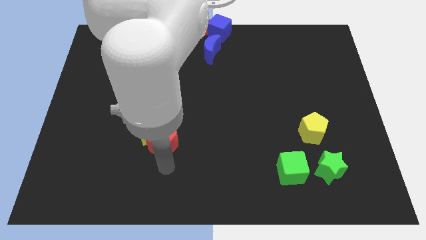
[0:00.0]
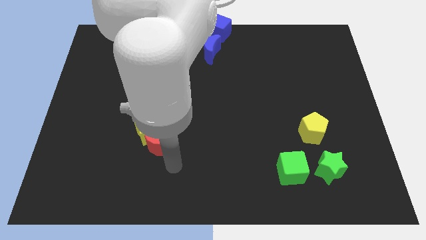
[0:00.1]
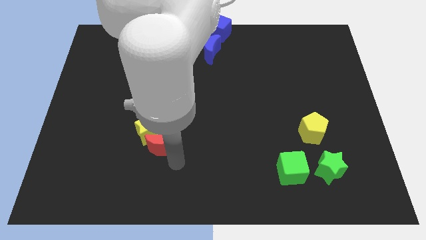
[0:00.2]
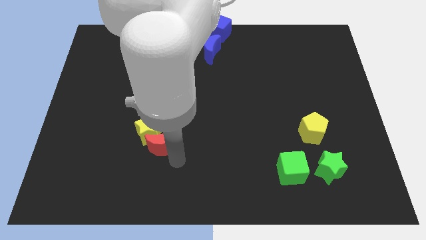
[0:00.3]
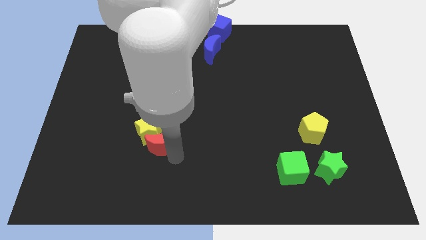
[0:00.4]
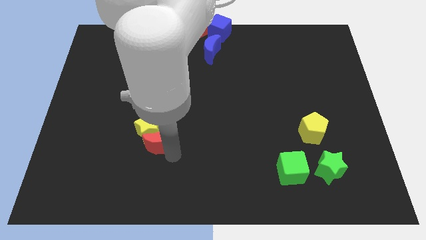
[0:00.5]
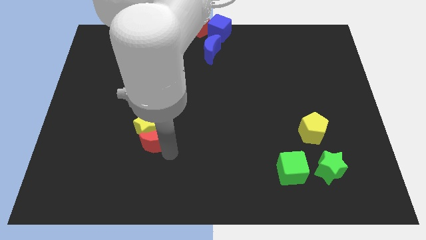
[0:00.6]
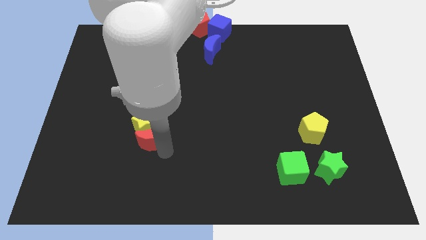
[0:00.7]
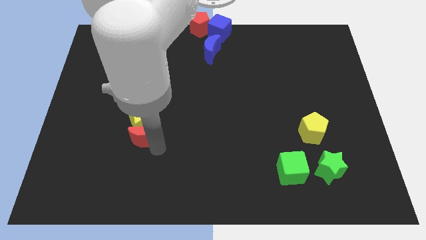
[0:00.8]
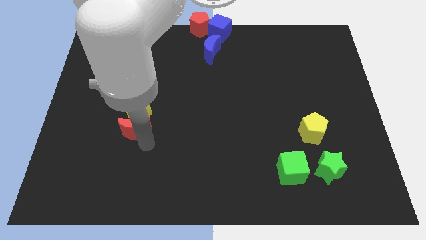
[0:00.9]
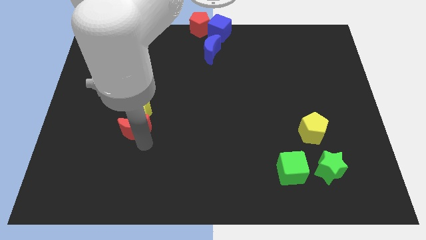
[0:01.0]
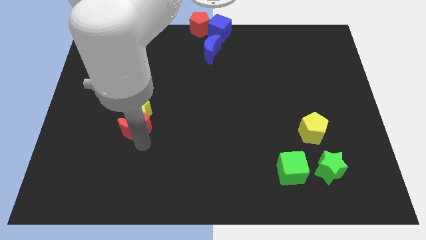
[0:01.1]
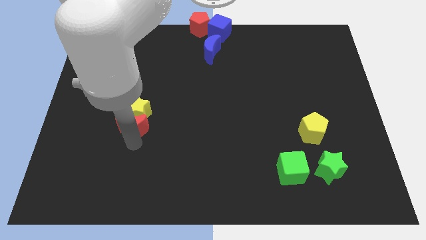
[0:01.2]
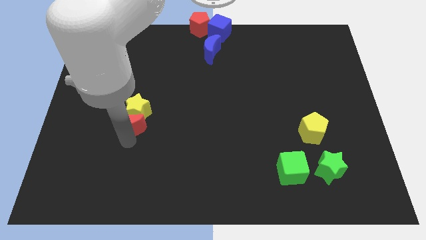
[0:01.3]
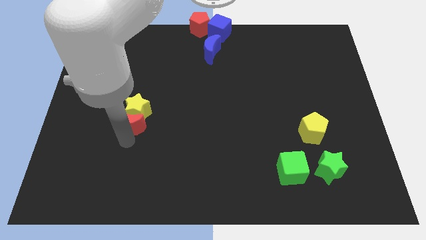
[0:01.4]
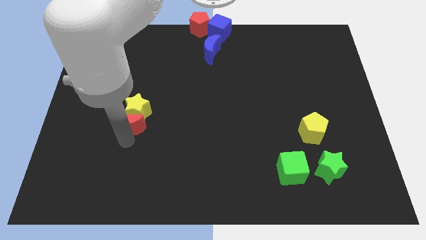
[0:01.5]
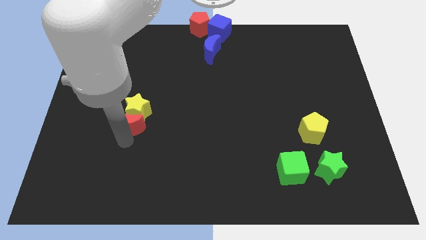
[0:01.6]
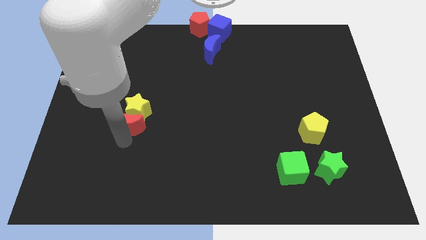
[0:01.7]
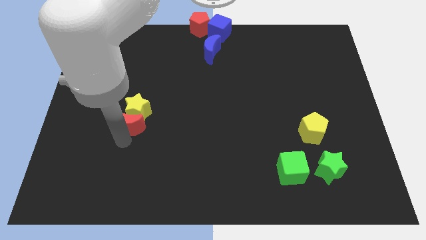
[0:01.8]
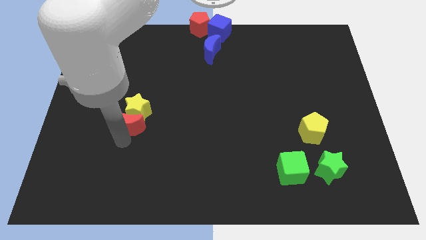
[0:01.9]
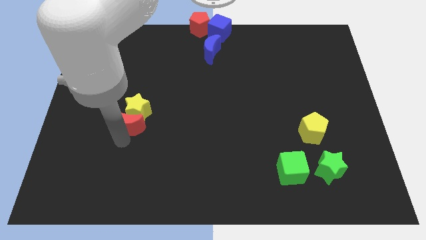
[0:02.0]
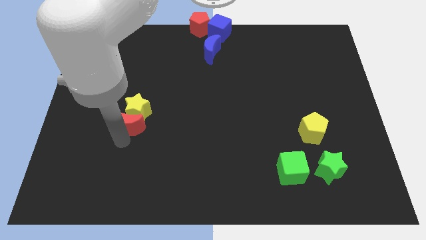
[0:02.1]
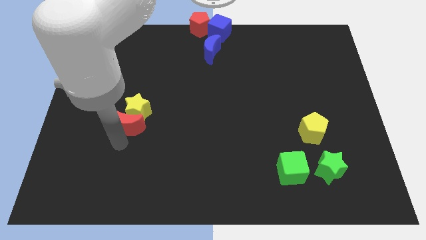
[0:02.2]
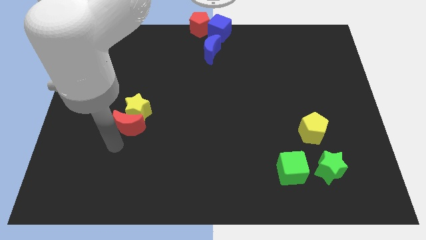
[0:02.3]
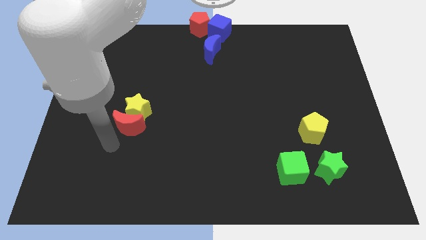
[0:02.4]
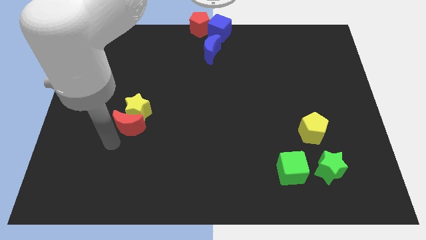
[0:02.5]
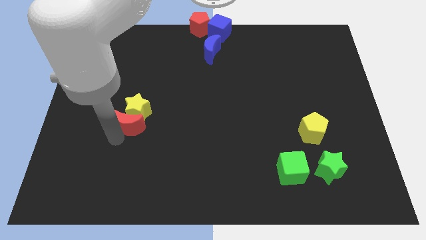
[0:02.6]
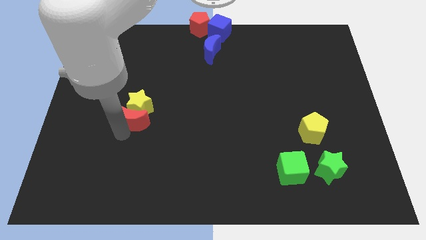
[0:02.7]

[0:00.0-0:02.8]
push red crescent in to yellow star

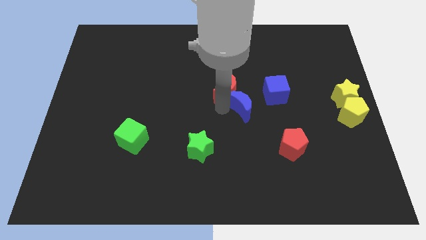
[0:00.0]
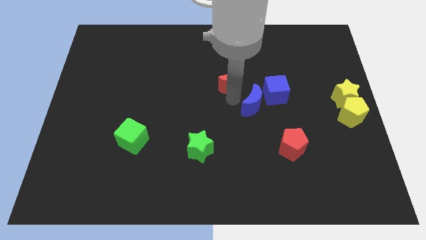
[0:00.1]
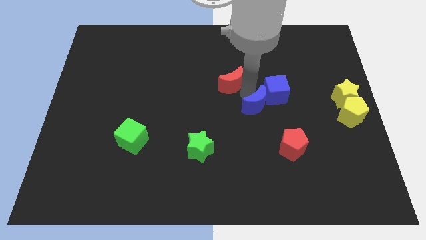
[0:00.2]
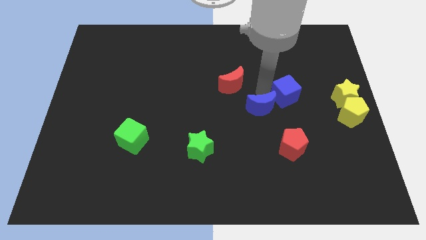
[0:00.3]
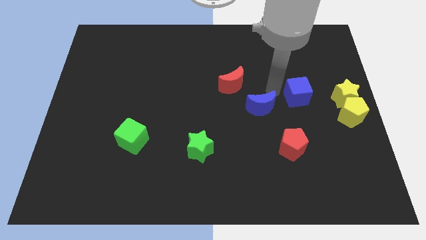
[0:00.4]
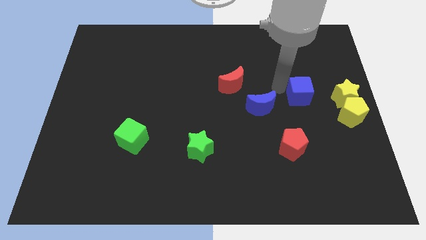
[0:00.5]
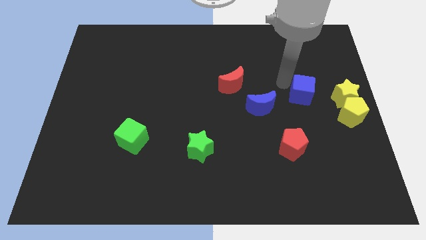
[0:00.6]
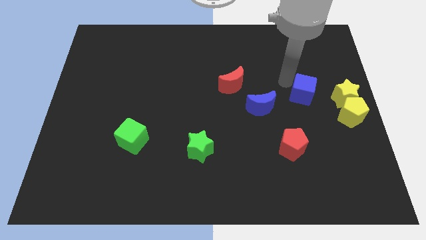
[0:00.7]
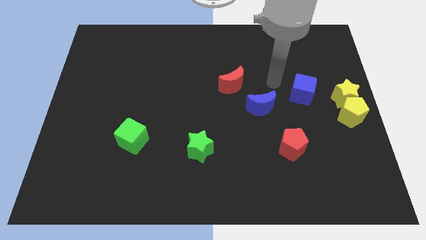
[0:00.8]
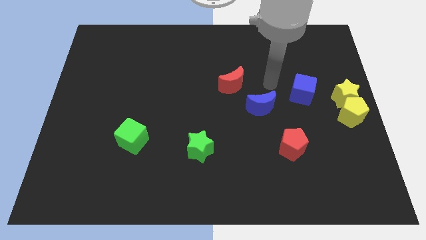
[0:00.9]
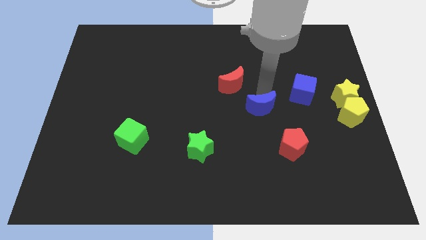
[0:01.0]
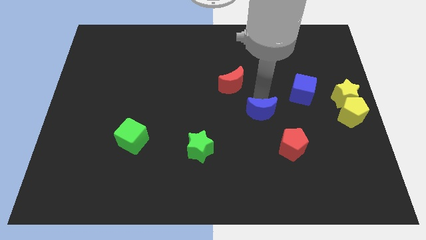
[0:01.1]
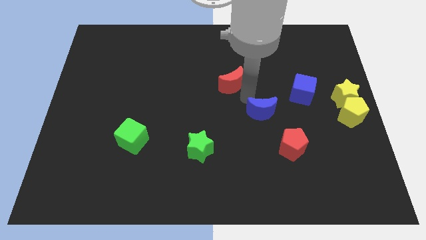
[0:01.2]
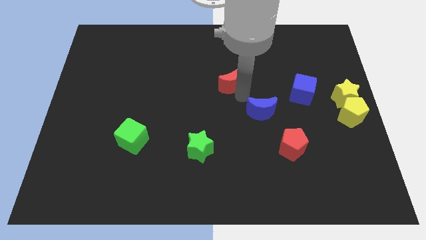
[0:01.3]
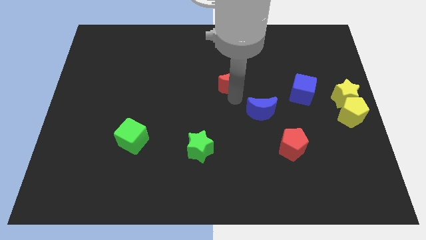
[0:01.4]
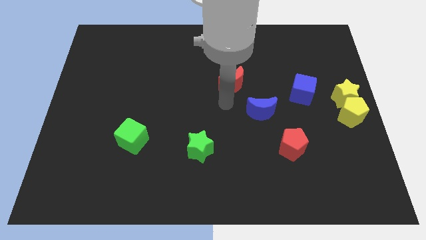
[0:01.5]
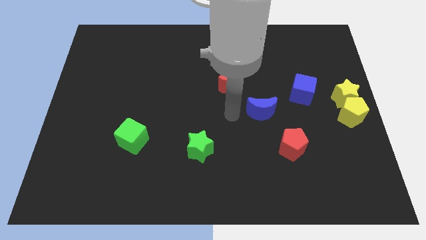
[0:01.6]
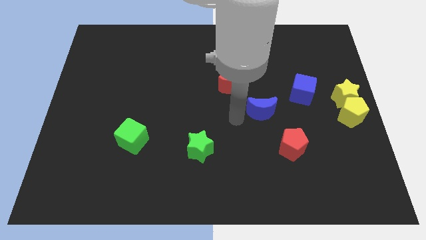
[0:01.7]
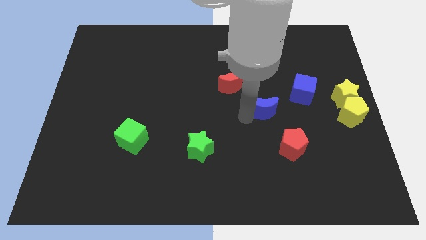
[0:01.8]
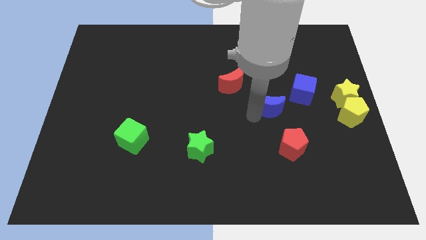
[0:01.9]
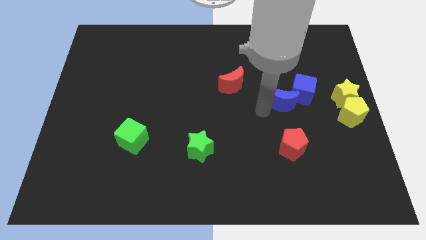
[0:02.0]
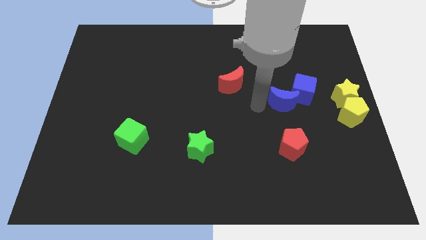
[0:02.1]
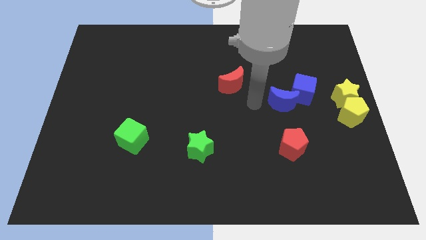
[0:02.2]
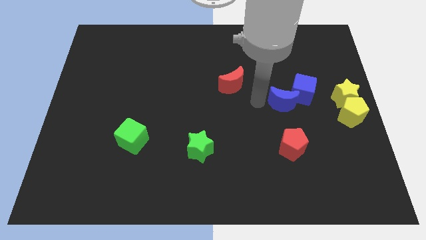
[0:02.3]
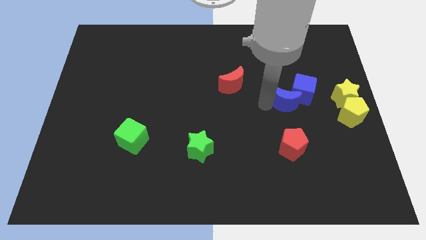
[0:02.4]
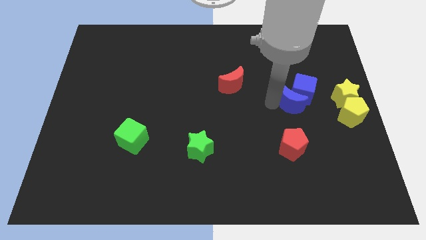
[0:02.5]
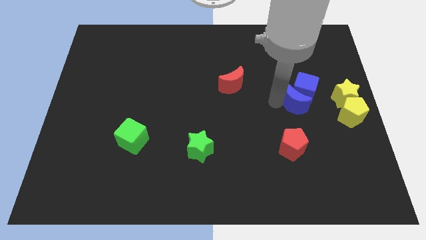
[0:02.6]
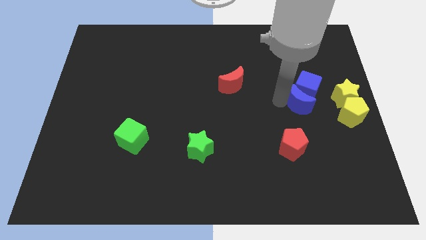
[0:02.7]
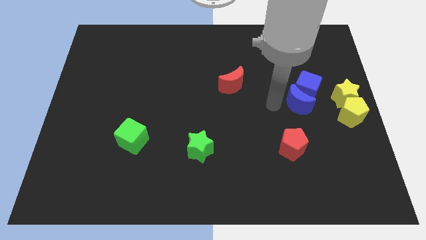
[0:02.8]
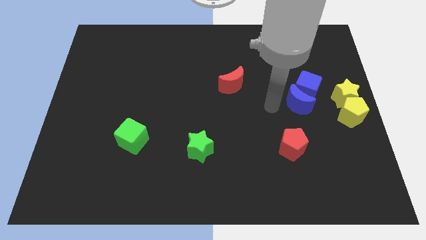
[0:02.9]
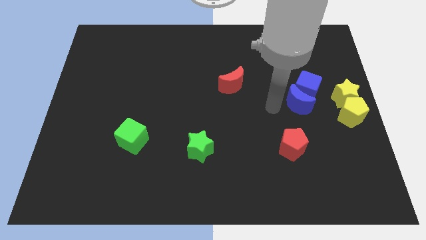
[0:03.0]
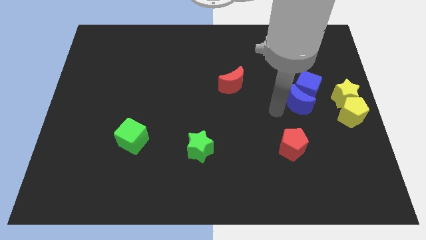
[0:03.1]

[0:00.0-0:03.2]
push the blue crescent to the bottom side of the blue cube

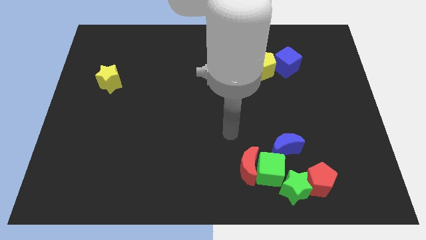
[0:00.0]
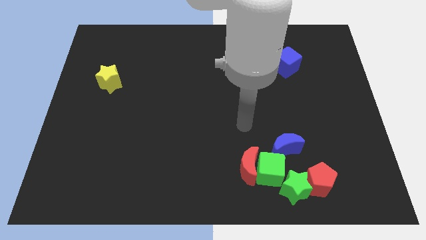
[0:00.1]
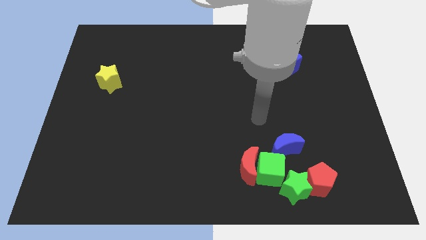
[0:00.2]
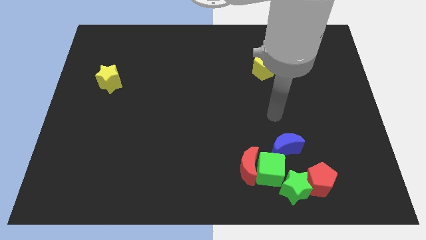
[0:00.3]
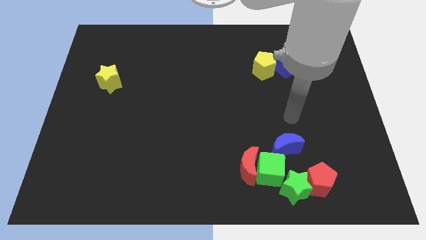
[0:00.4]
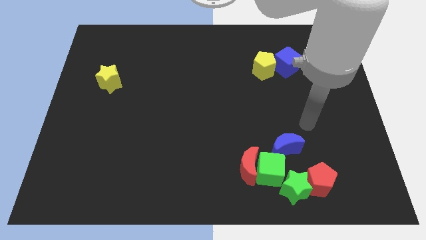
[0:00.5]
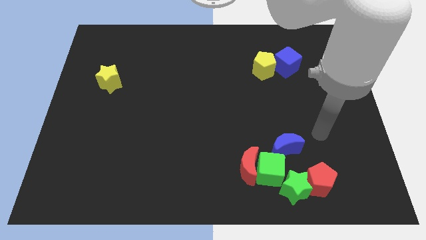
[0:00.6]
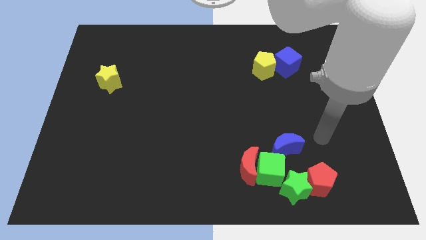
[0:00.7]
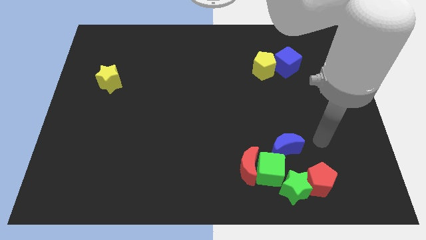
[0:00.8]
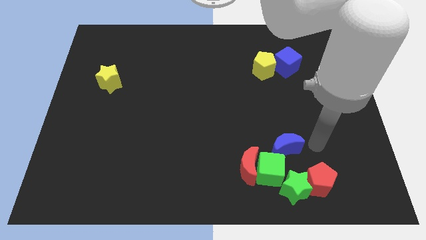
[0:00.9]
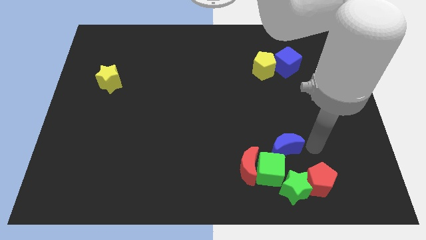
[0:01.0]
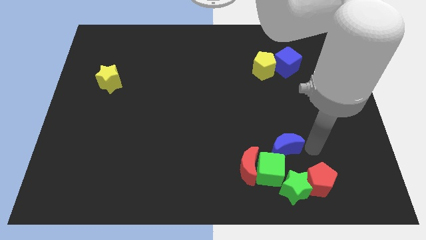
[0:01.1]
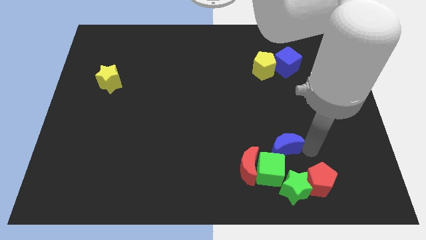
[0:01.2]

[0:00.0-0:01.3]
place your arm to the right of the blue moon

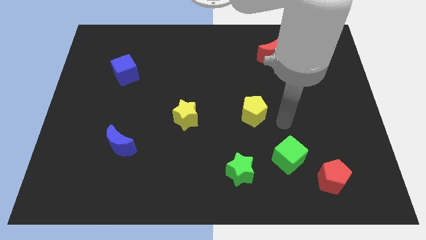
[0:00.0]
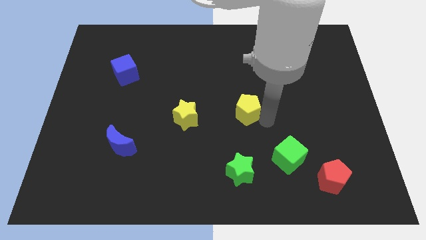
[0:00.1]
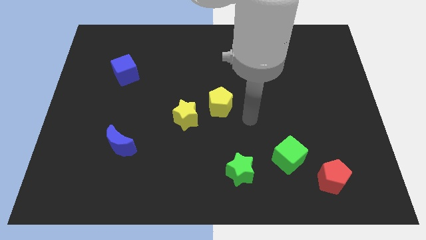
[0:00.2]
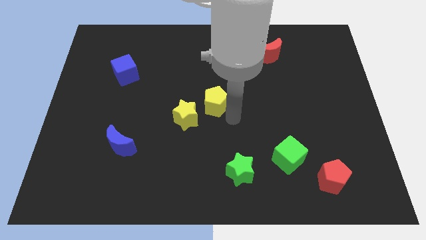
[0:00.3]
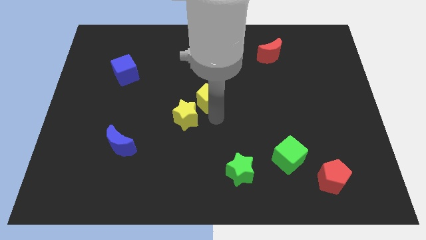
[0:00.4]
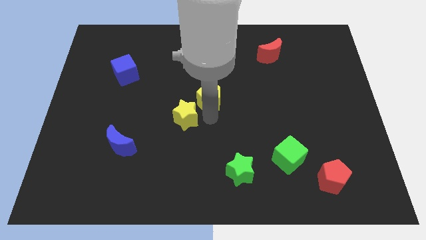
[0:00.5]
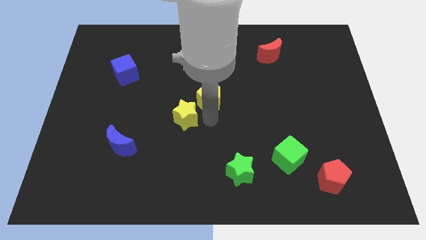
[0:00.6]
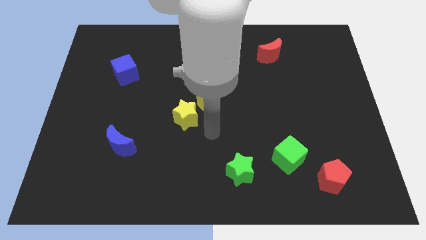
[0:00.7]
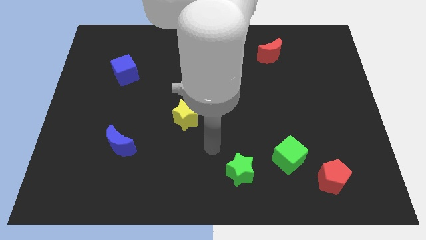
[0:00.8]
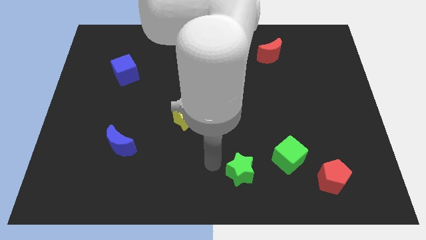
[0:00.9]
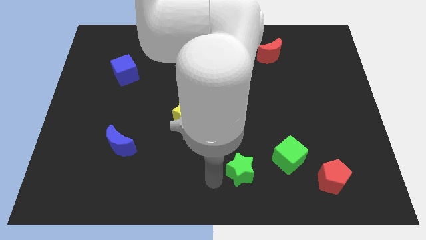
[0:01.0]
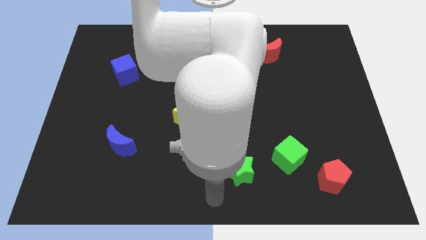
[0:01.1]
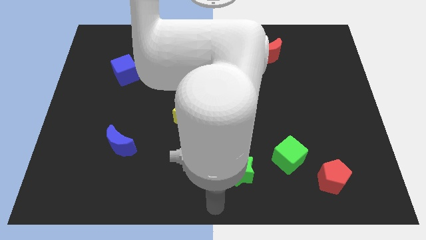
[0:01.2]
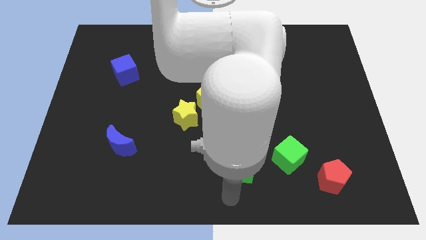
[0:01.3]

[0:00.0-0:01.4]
push the yellow pentagon into yellow star to the right

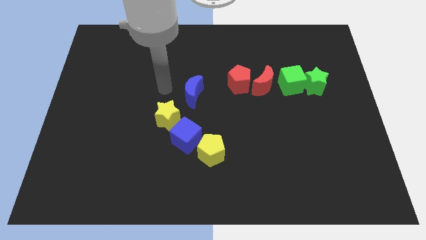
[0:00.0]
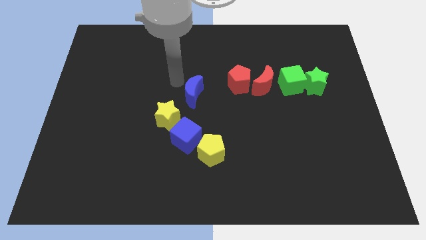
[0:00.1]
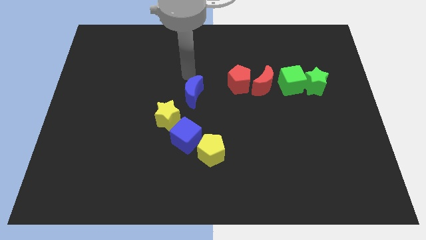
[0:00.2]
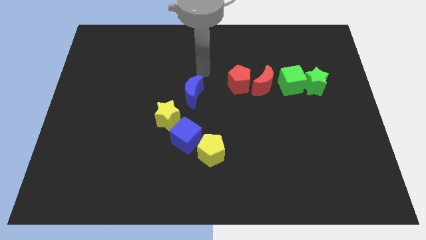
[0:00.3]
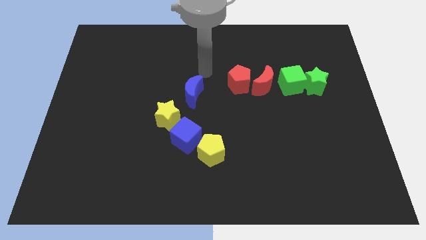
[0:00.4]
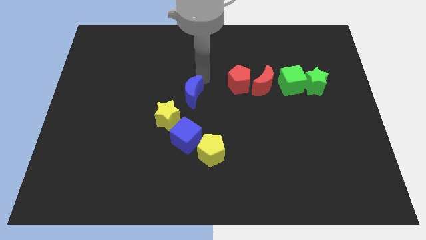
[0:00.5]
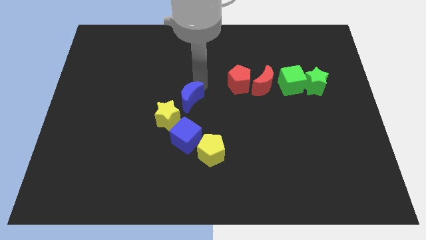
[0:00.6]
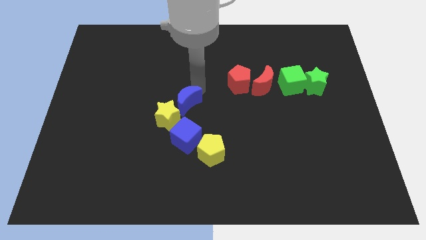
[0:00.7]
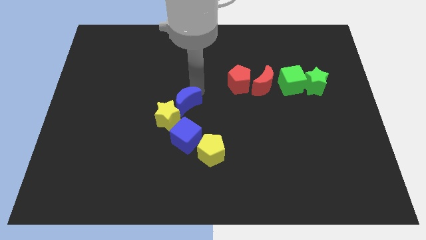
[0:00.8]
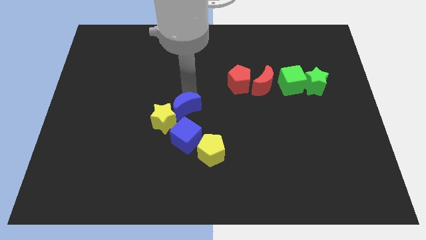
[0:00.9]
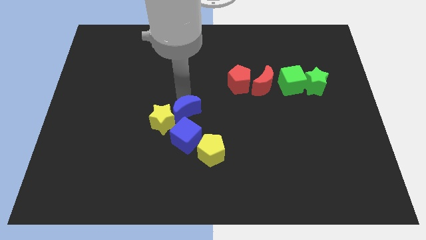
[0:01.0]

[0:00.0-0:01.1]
push the blue crescent on the top of the blue cube
